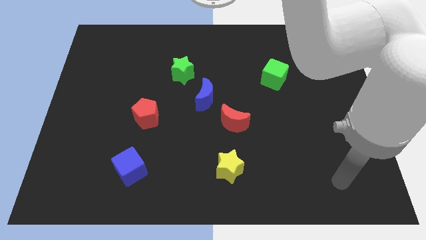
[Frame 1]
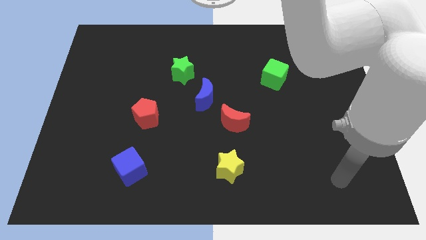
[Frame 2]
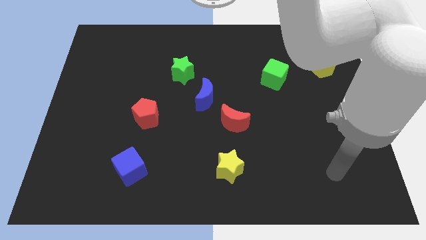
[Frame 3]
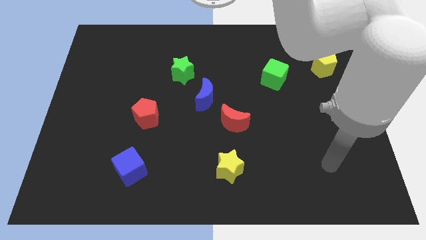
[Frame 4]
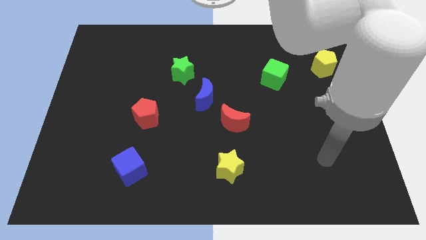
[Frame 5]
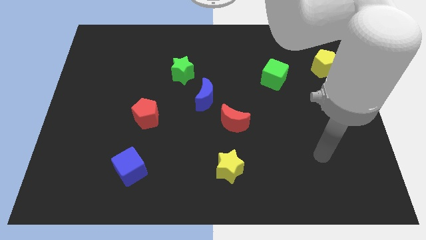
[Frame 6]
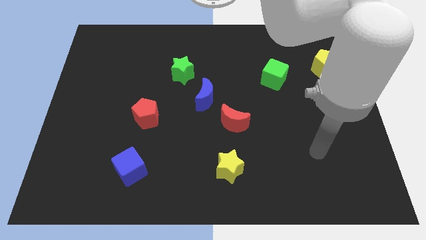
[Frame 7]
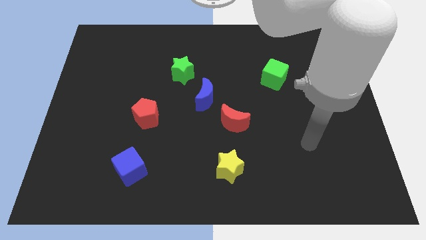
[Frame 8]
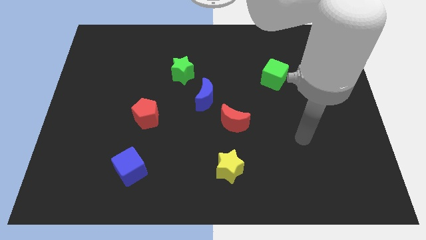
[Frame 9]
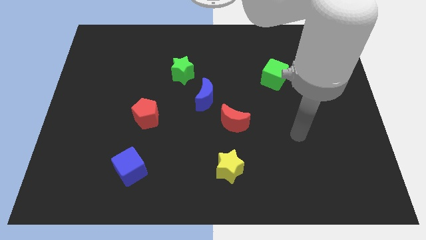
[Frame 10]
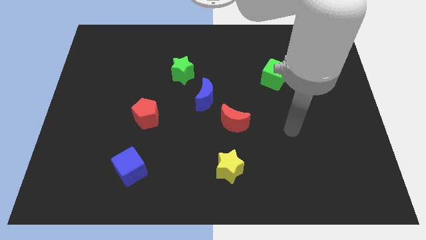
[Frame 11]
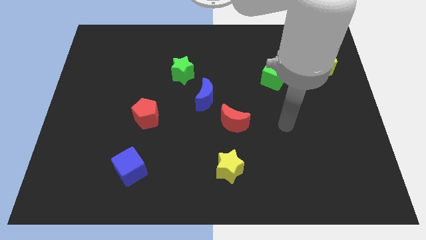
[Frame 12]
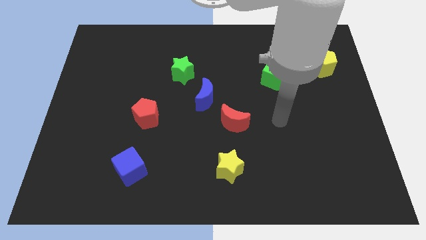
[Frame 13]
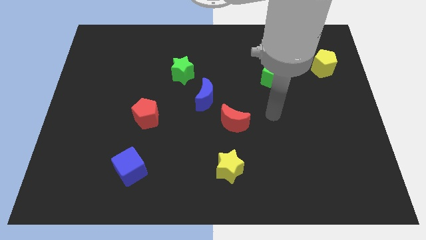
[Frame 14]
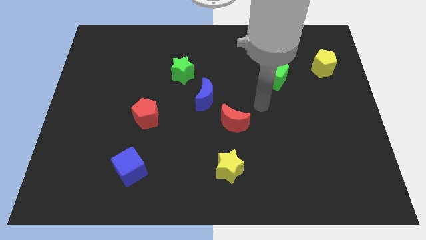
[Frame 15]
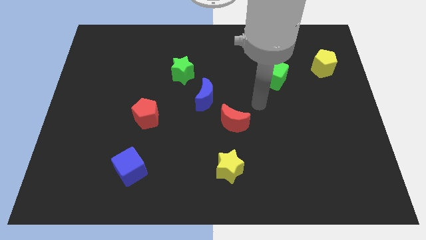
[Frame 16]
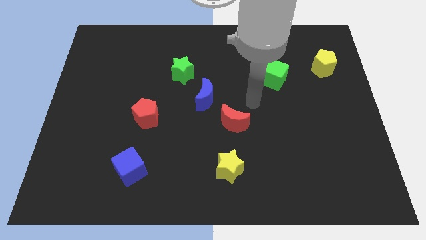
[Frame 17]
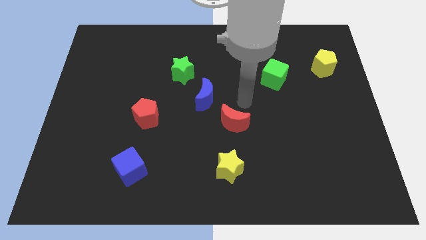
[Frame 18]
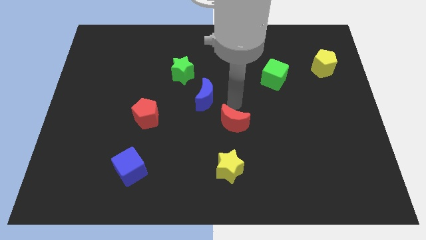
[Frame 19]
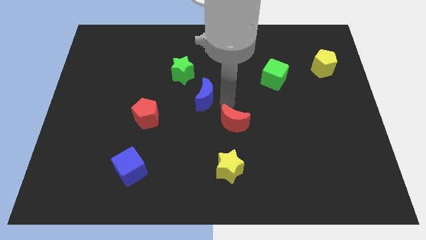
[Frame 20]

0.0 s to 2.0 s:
move your arm at the center of the board

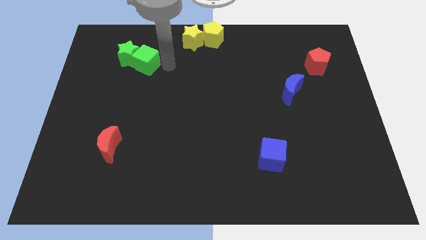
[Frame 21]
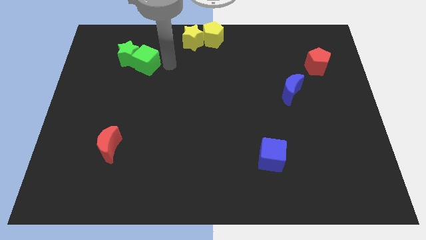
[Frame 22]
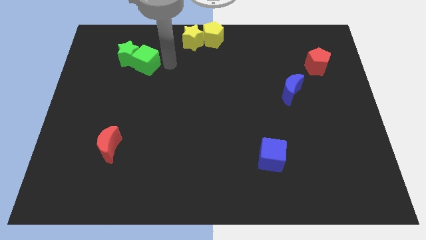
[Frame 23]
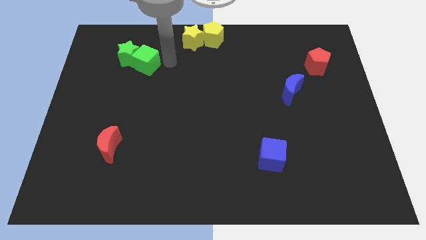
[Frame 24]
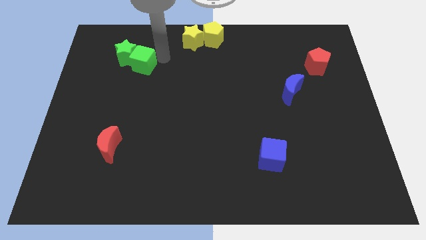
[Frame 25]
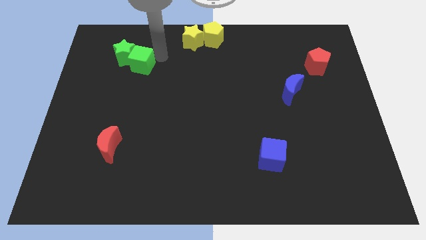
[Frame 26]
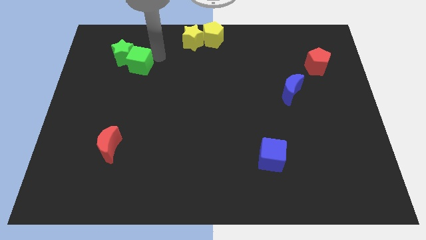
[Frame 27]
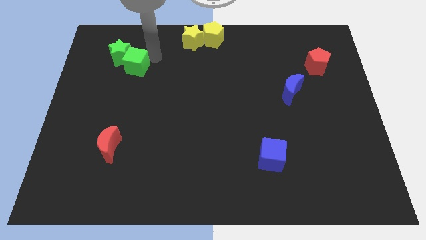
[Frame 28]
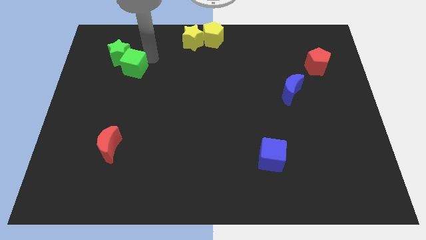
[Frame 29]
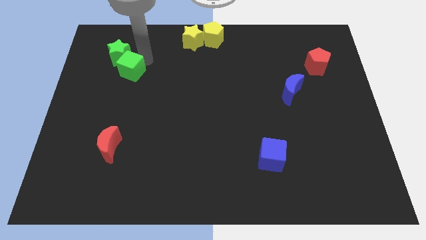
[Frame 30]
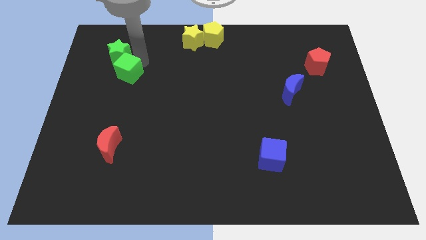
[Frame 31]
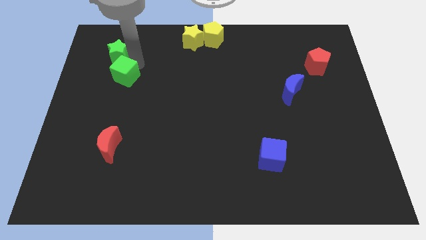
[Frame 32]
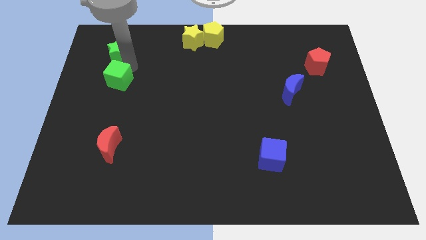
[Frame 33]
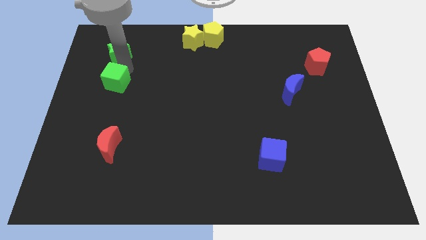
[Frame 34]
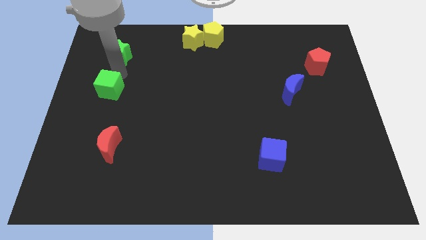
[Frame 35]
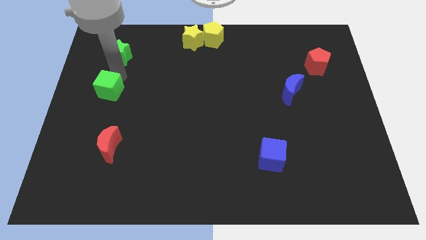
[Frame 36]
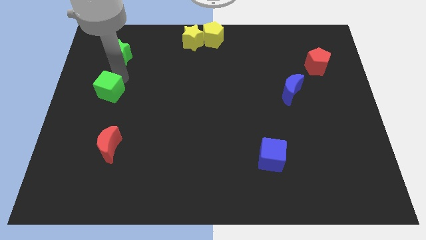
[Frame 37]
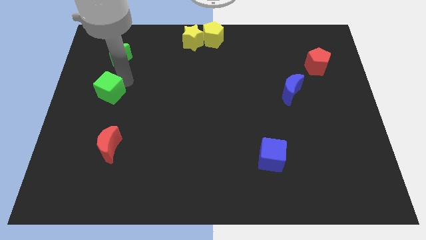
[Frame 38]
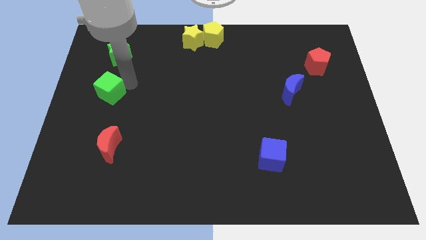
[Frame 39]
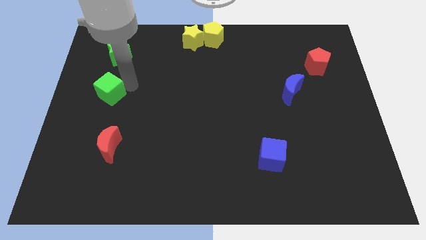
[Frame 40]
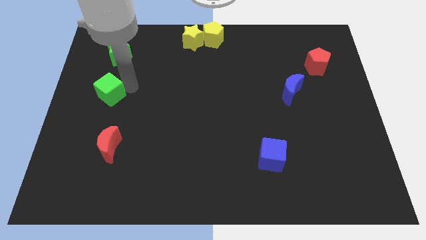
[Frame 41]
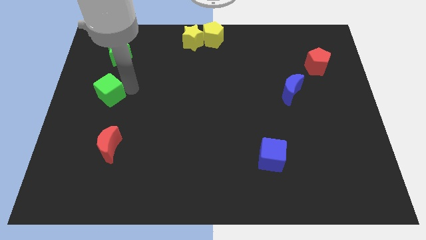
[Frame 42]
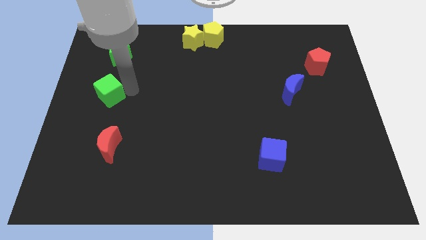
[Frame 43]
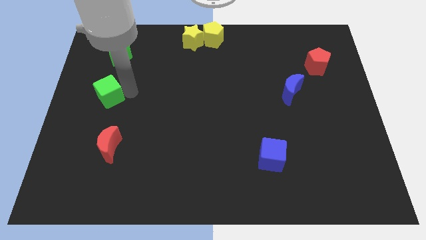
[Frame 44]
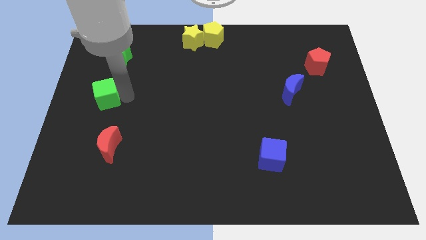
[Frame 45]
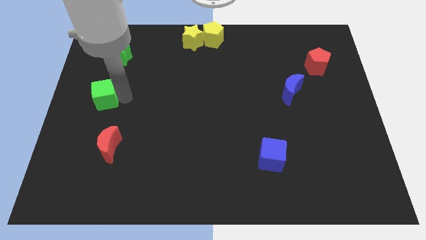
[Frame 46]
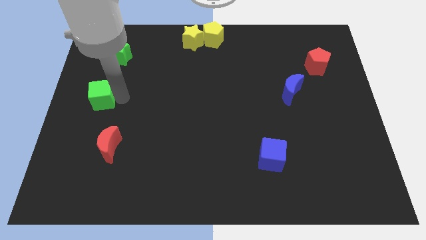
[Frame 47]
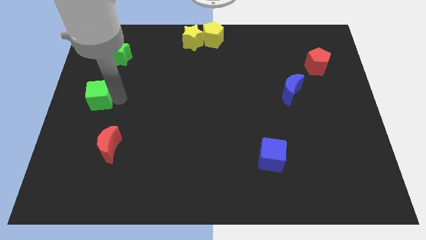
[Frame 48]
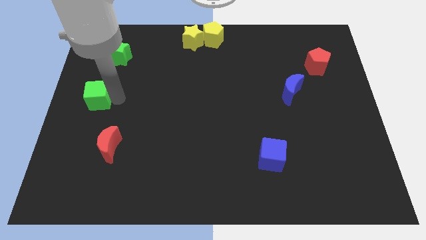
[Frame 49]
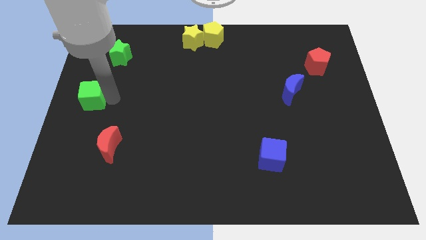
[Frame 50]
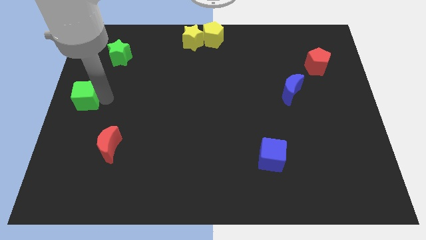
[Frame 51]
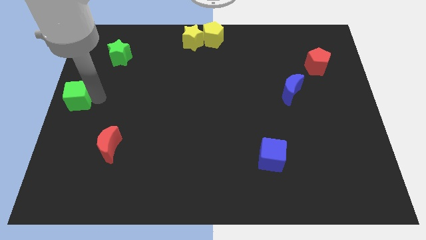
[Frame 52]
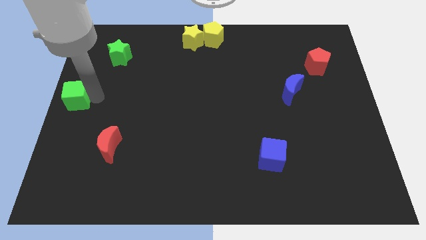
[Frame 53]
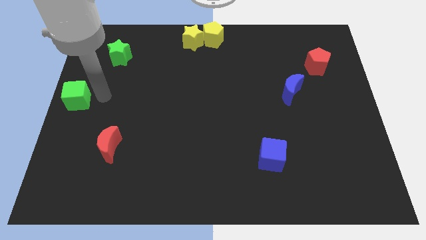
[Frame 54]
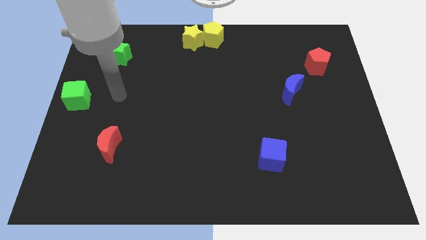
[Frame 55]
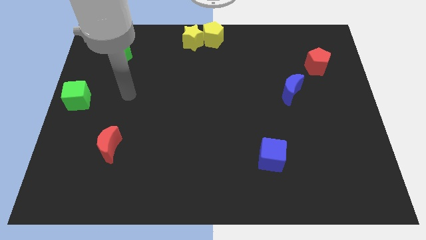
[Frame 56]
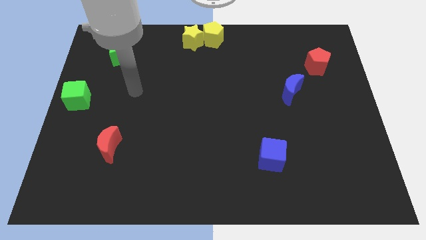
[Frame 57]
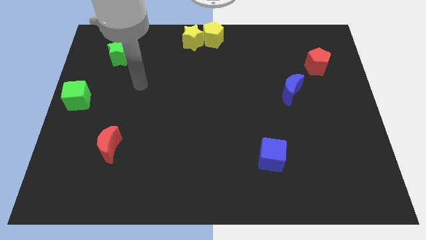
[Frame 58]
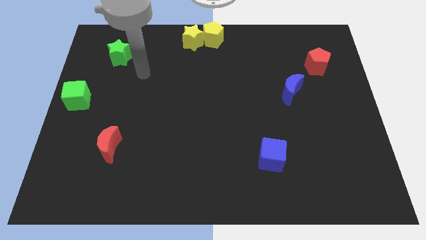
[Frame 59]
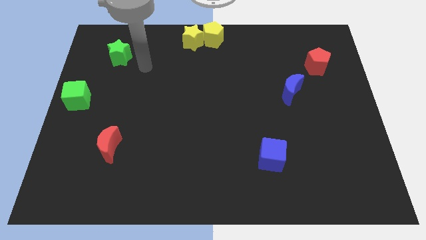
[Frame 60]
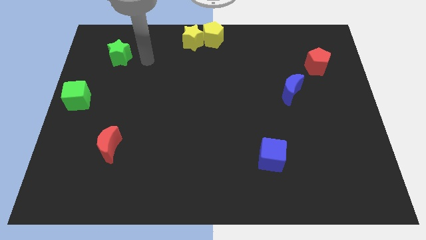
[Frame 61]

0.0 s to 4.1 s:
separate the green cube and green star

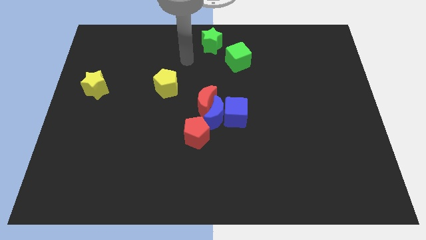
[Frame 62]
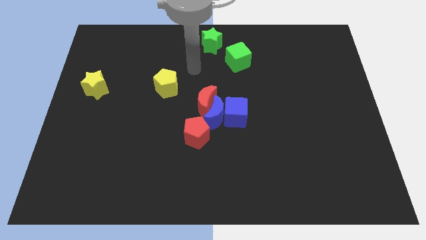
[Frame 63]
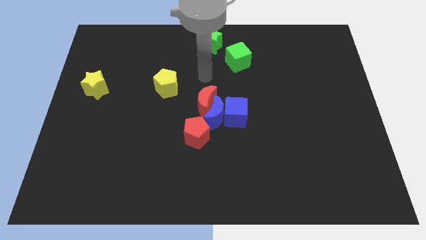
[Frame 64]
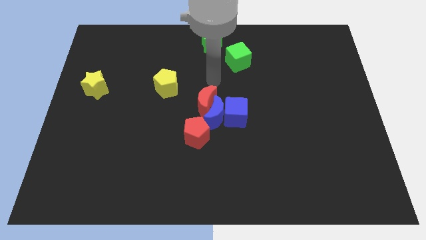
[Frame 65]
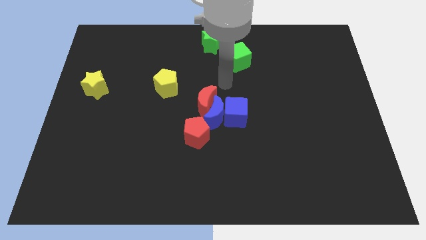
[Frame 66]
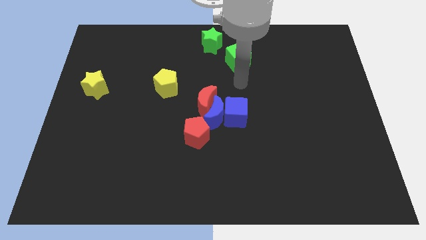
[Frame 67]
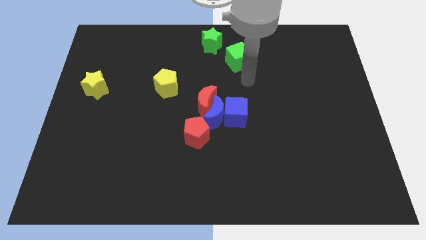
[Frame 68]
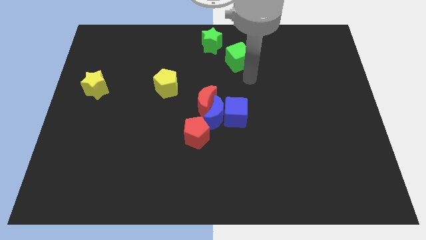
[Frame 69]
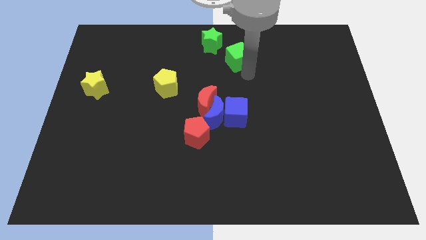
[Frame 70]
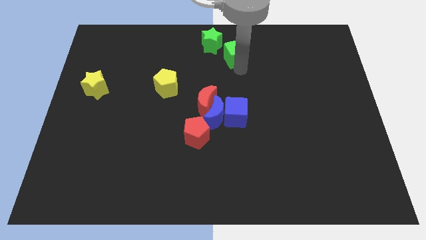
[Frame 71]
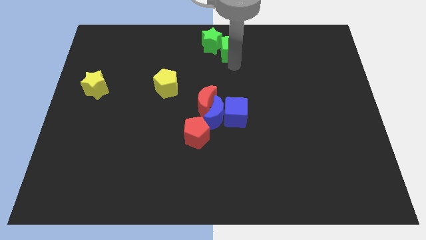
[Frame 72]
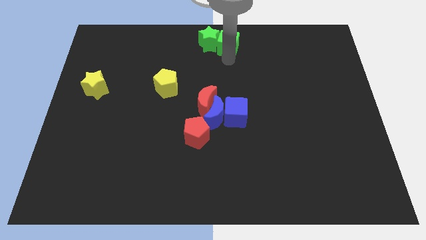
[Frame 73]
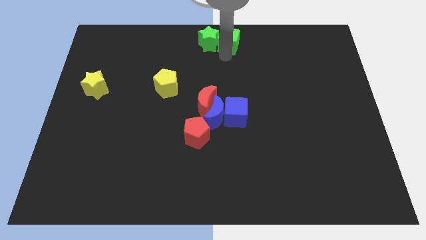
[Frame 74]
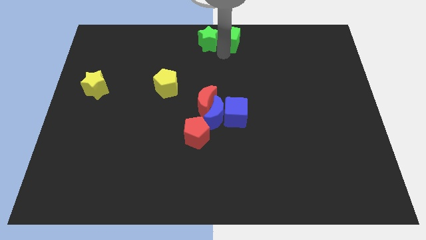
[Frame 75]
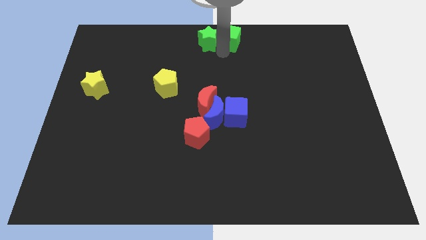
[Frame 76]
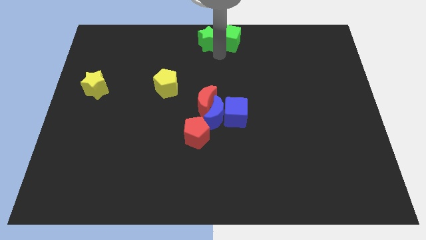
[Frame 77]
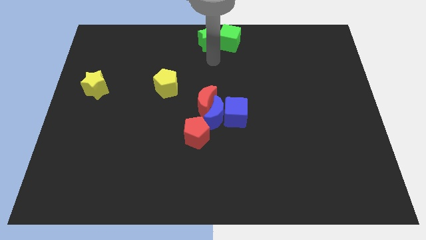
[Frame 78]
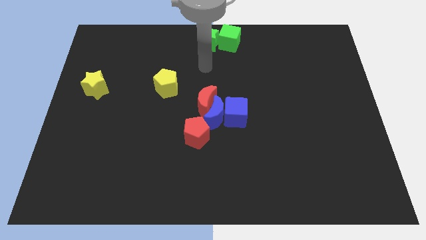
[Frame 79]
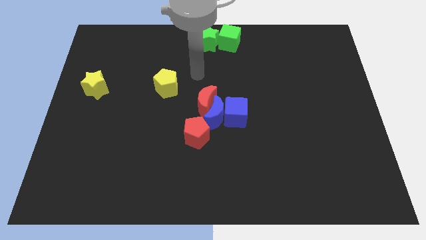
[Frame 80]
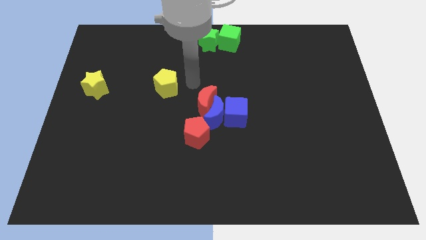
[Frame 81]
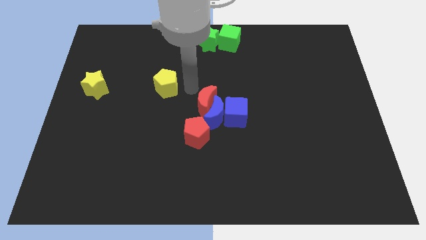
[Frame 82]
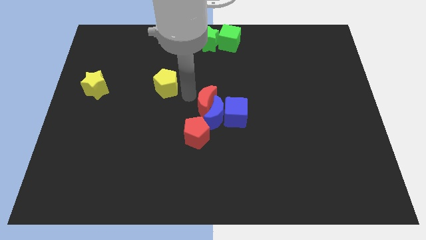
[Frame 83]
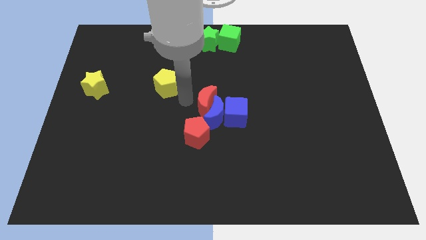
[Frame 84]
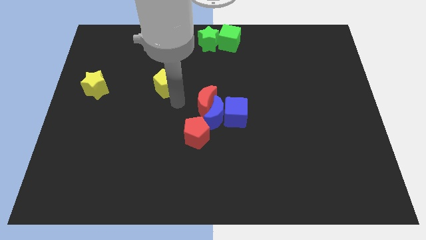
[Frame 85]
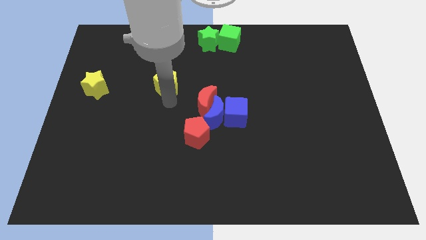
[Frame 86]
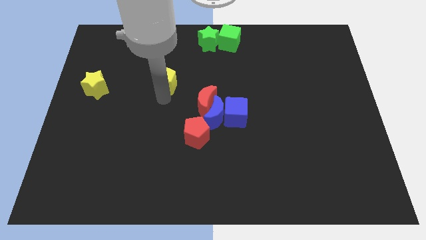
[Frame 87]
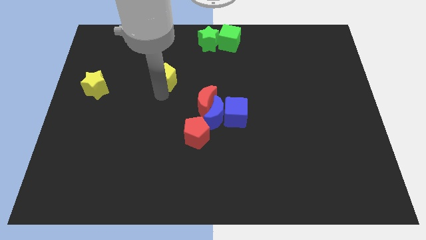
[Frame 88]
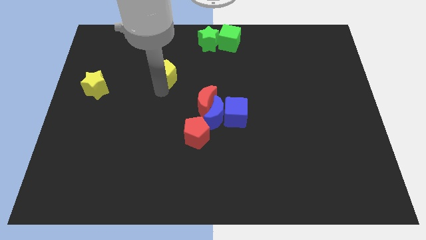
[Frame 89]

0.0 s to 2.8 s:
move green cube beside green star
